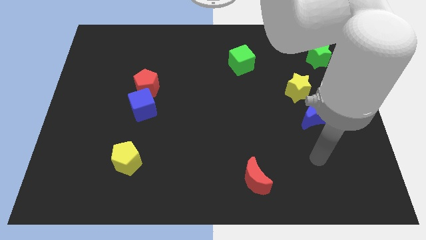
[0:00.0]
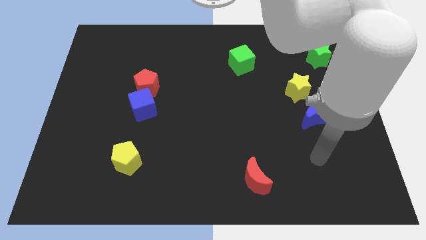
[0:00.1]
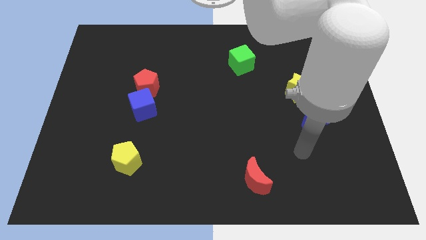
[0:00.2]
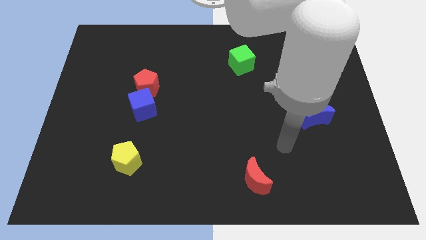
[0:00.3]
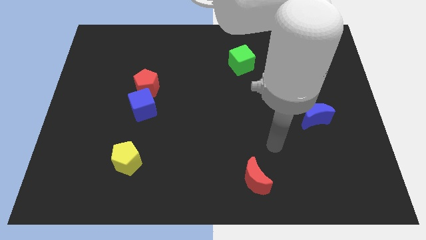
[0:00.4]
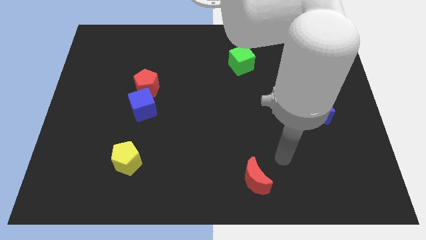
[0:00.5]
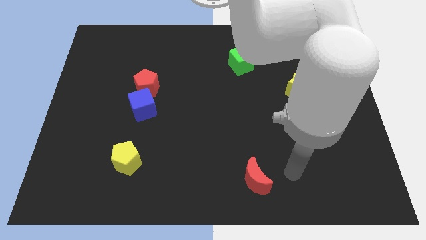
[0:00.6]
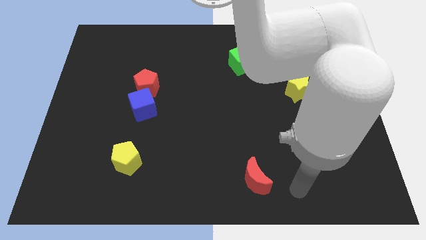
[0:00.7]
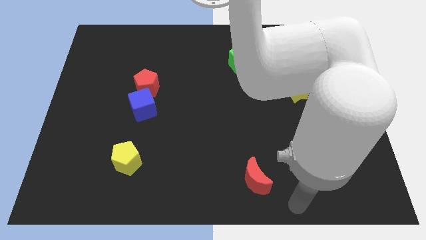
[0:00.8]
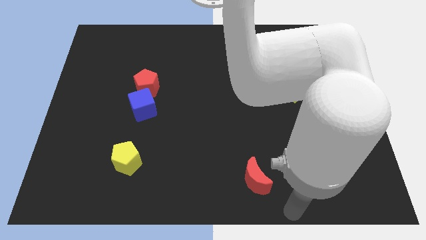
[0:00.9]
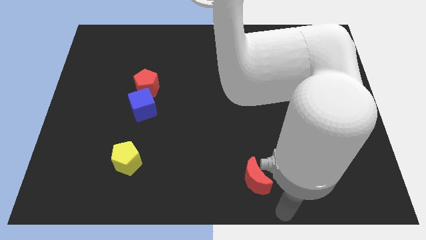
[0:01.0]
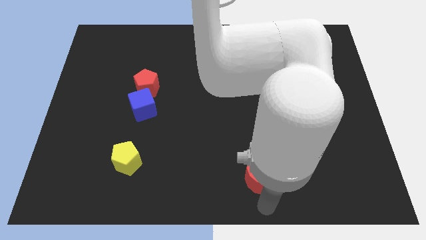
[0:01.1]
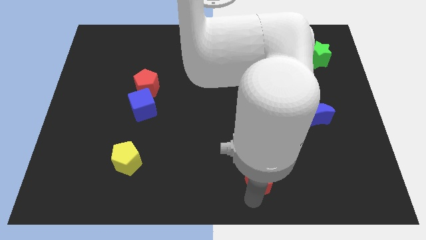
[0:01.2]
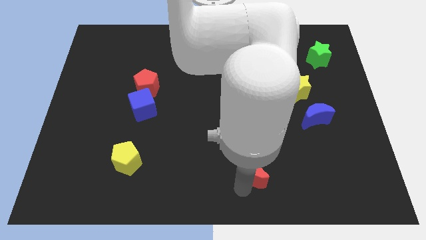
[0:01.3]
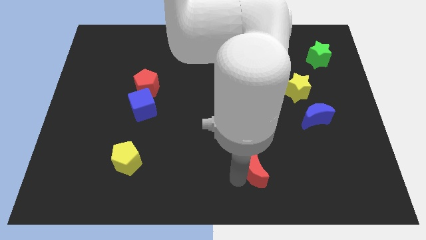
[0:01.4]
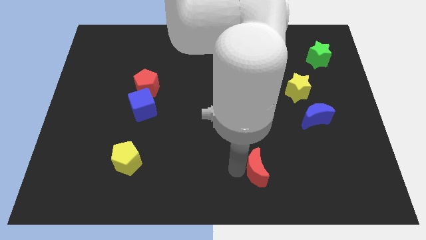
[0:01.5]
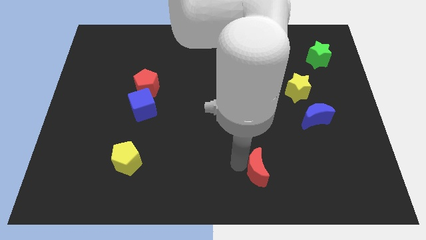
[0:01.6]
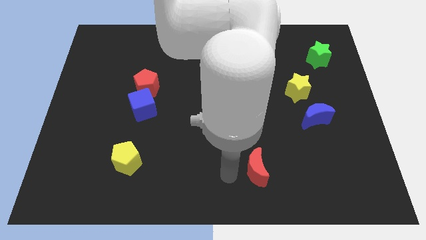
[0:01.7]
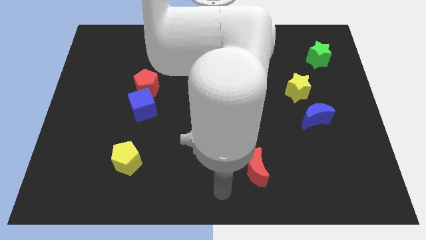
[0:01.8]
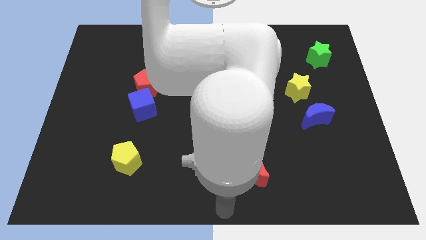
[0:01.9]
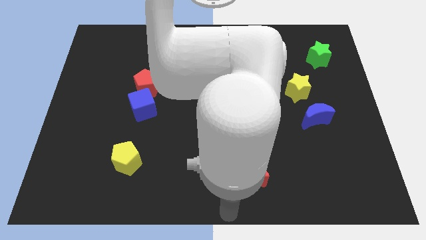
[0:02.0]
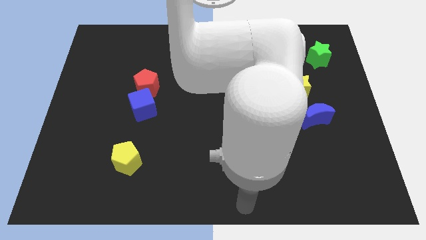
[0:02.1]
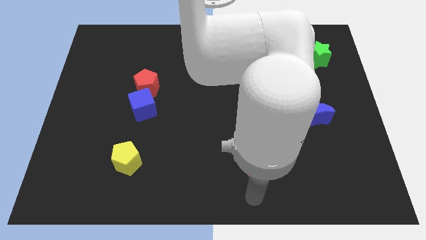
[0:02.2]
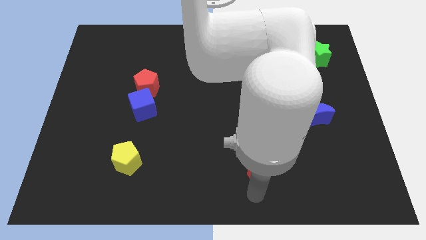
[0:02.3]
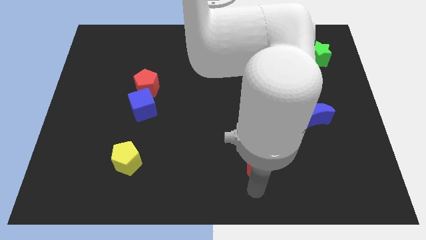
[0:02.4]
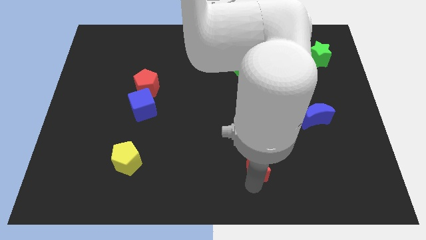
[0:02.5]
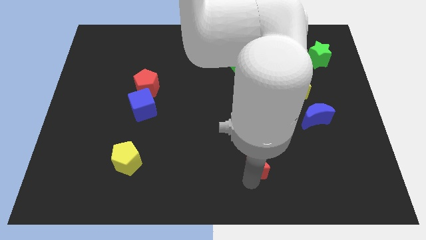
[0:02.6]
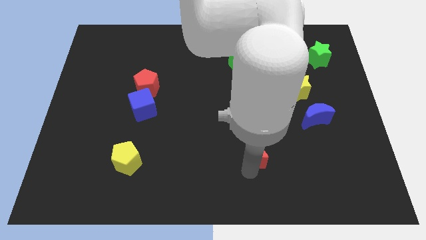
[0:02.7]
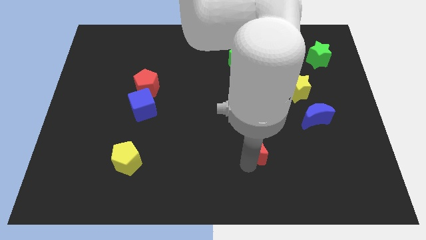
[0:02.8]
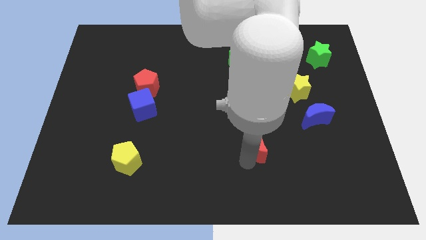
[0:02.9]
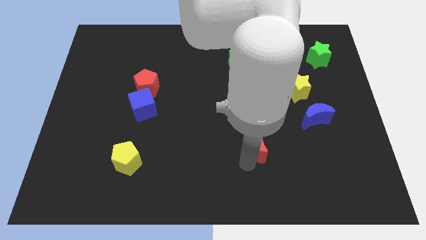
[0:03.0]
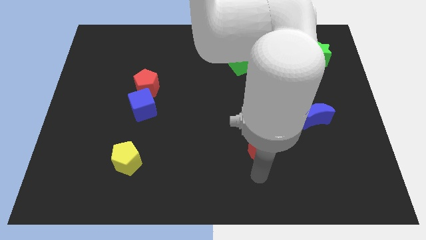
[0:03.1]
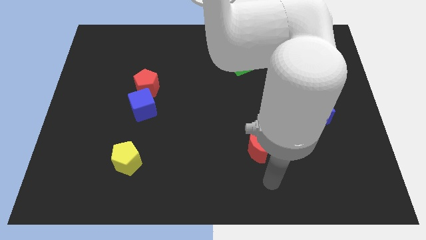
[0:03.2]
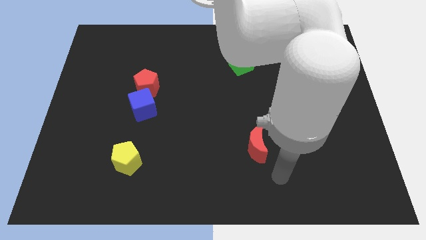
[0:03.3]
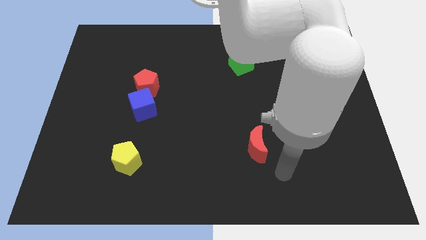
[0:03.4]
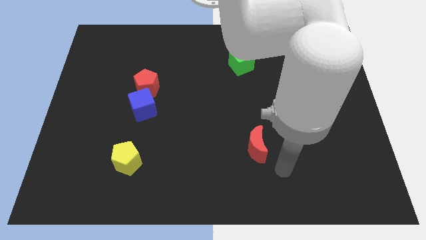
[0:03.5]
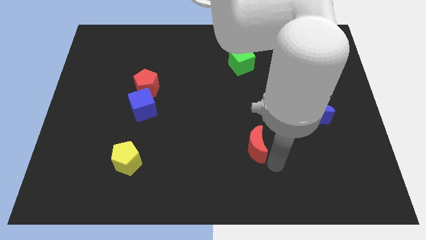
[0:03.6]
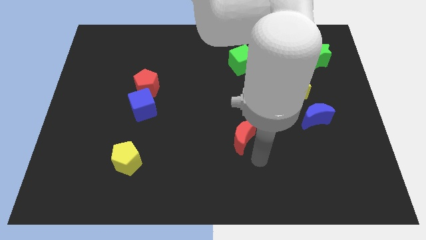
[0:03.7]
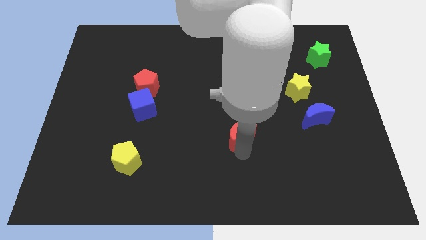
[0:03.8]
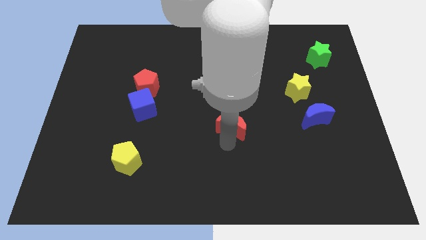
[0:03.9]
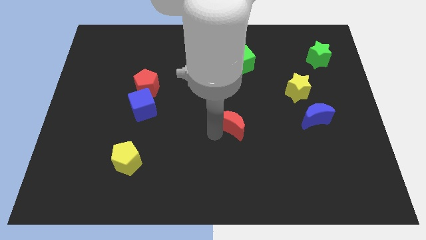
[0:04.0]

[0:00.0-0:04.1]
place red moon to the left of blue moon

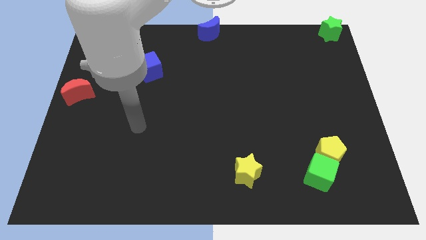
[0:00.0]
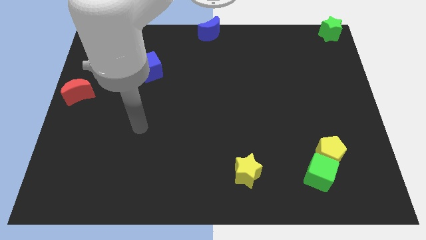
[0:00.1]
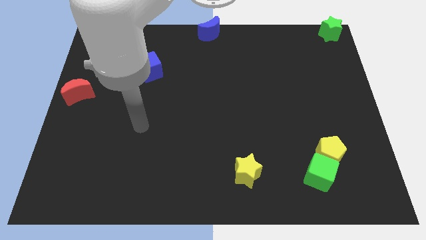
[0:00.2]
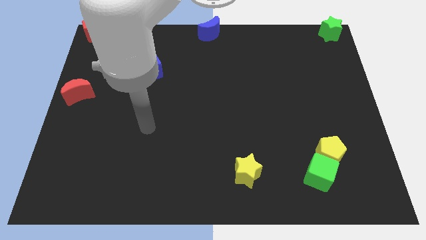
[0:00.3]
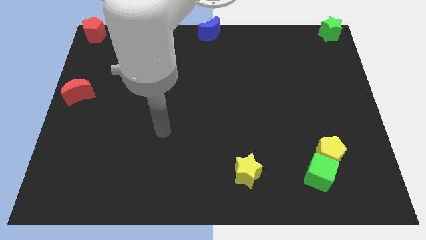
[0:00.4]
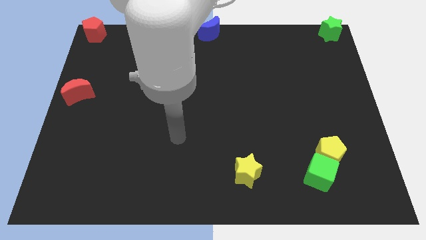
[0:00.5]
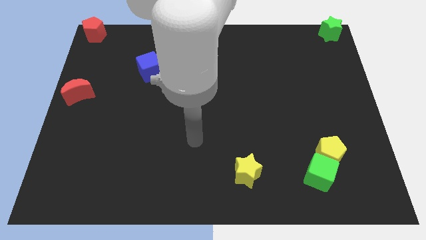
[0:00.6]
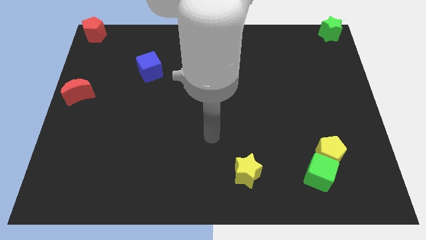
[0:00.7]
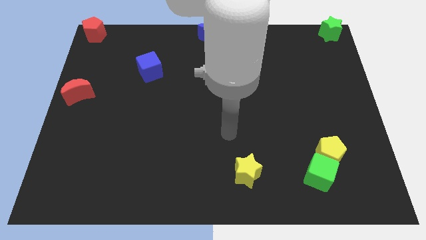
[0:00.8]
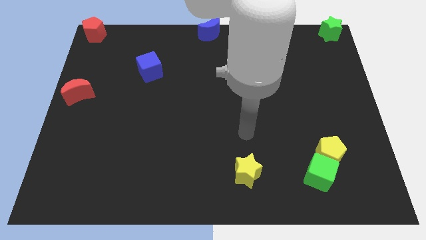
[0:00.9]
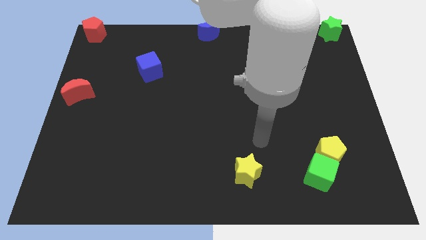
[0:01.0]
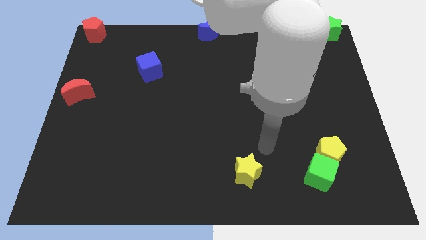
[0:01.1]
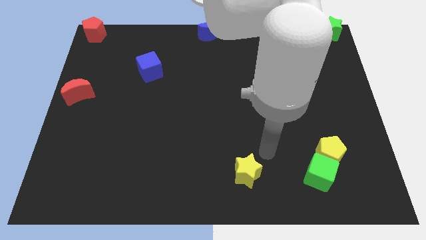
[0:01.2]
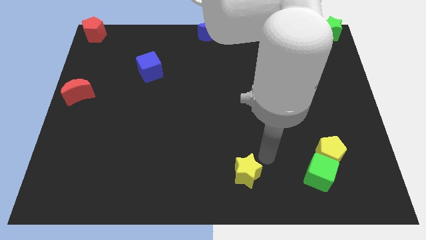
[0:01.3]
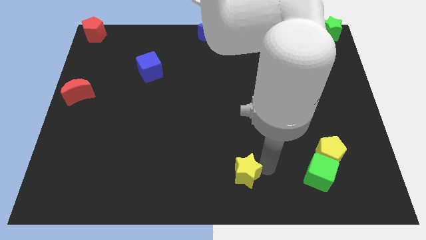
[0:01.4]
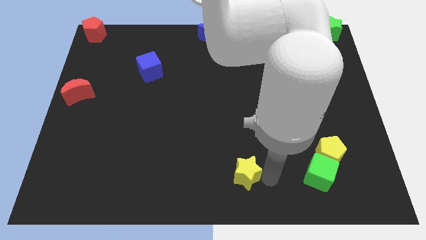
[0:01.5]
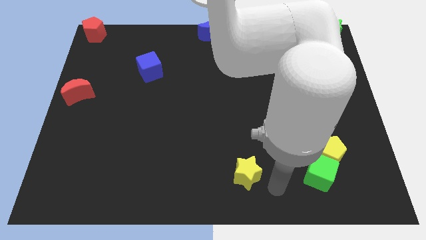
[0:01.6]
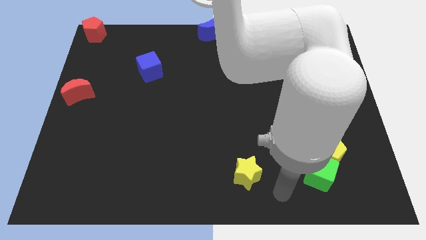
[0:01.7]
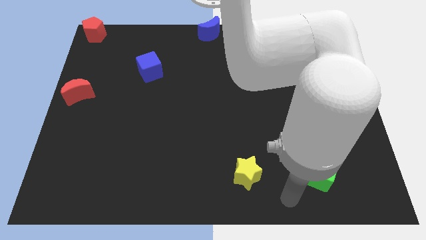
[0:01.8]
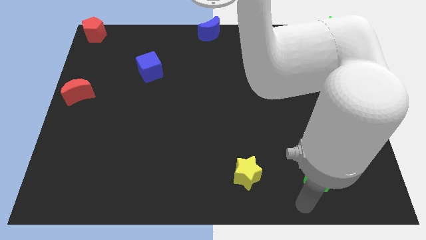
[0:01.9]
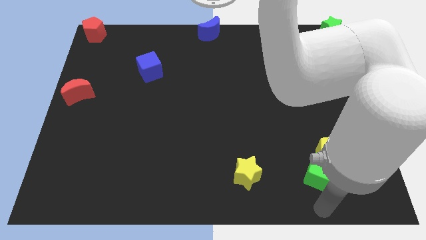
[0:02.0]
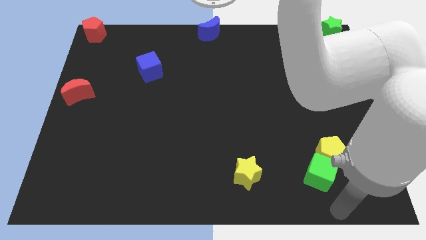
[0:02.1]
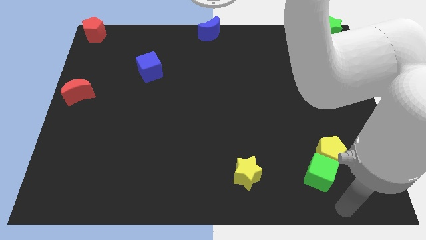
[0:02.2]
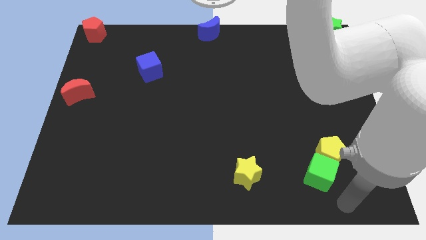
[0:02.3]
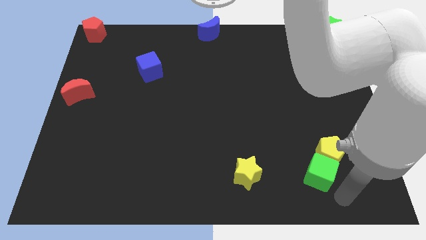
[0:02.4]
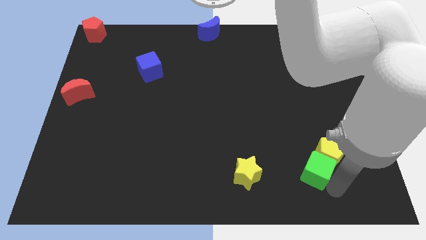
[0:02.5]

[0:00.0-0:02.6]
place your arm below green cube

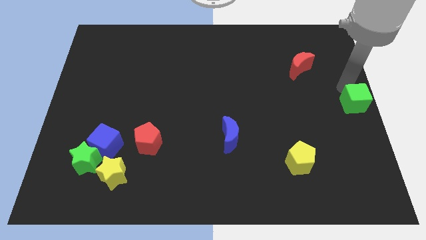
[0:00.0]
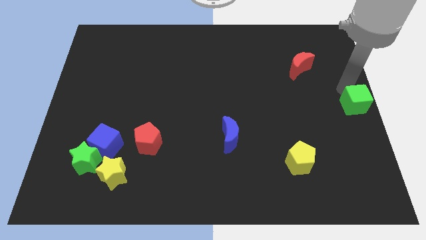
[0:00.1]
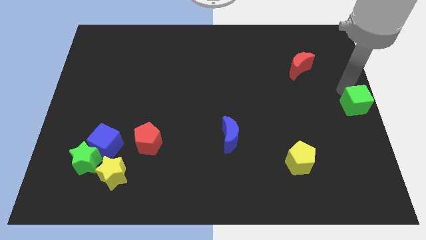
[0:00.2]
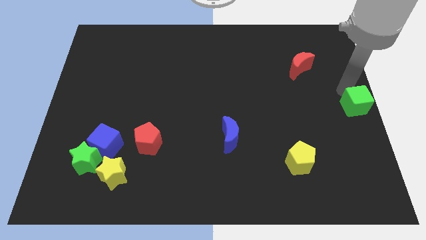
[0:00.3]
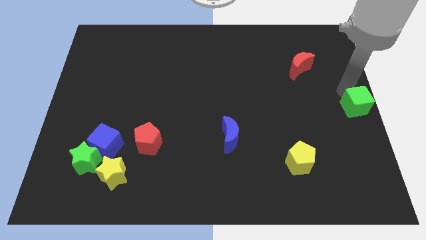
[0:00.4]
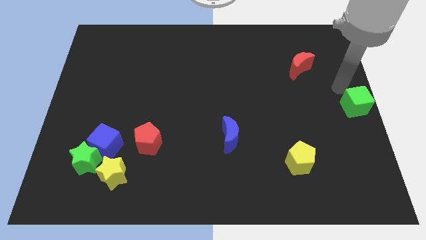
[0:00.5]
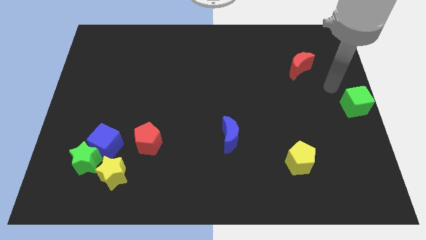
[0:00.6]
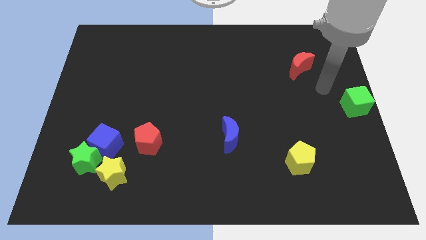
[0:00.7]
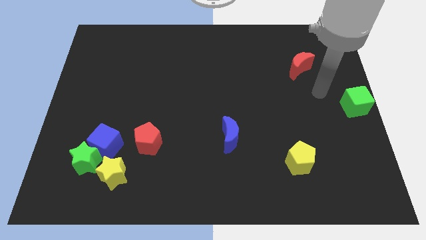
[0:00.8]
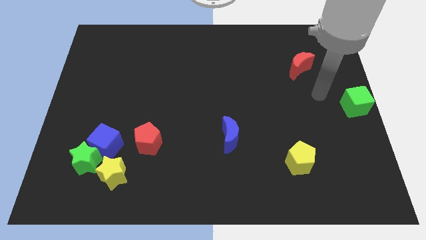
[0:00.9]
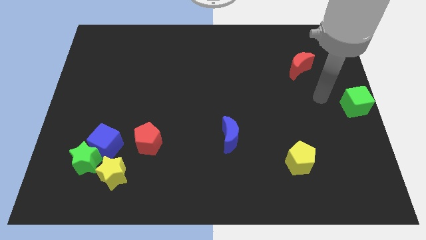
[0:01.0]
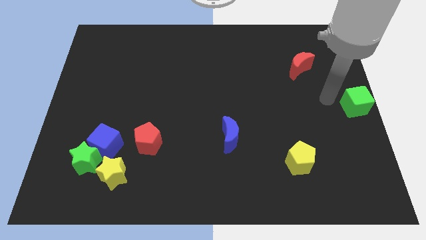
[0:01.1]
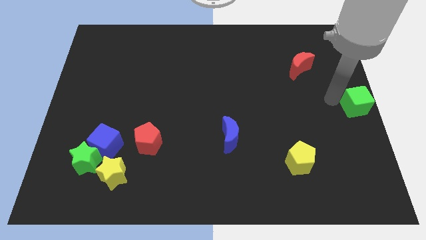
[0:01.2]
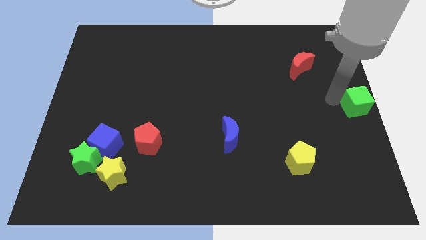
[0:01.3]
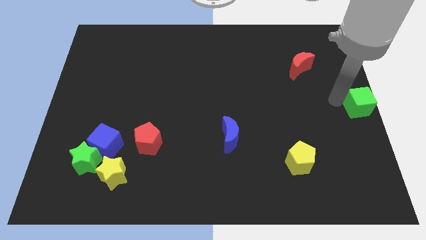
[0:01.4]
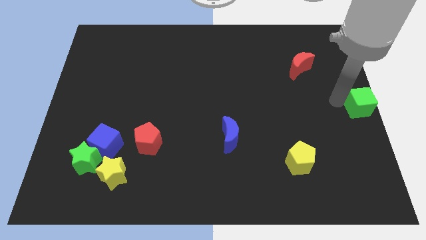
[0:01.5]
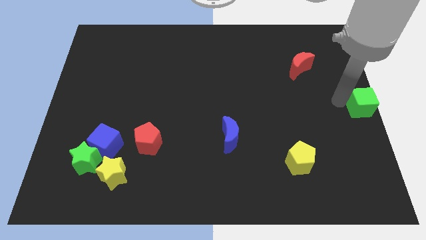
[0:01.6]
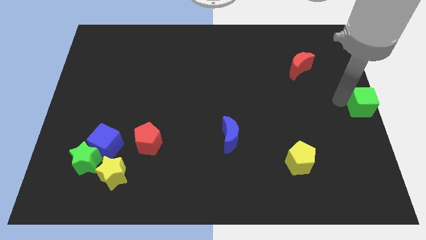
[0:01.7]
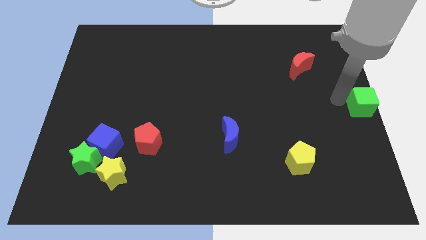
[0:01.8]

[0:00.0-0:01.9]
push the green cube to the right center of the board

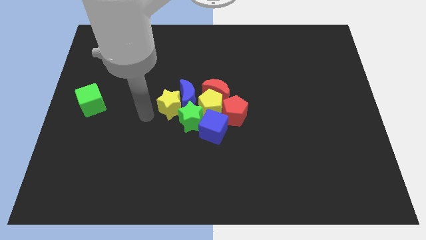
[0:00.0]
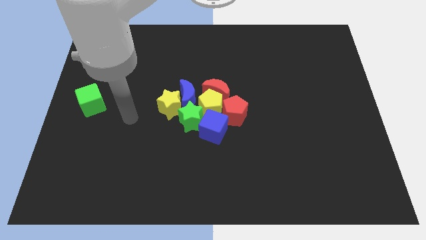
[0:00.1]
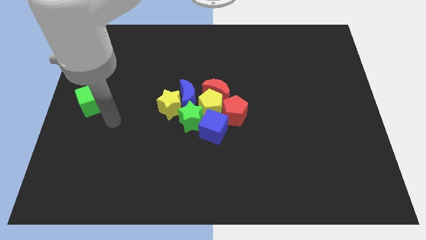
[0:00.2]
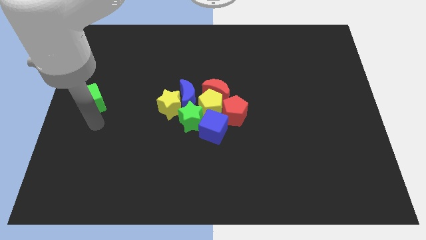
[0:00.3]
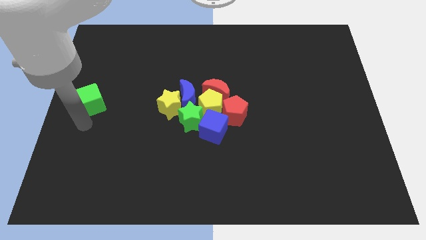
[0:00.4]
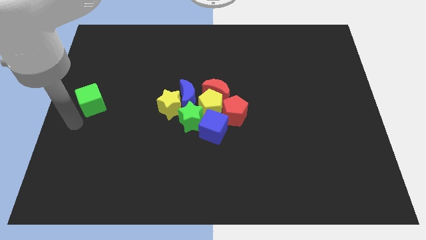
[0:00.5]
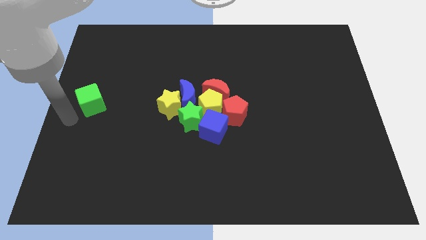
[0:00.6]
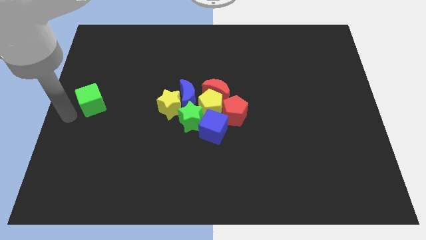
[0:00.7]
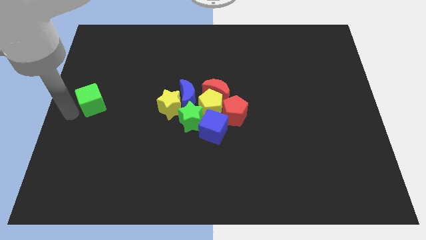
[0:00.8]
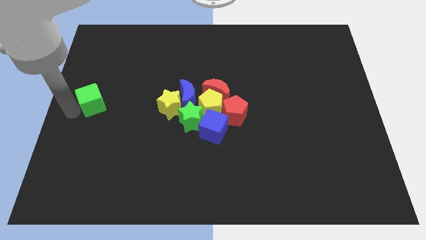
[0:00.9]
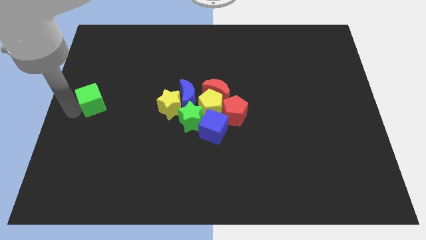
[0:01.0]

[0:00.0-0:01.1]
point your arm at the left of the green cube
